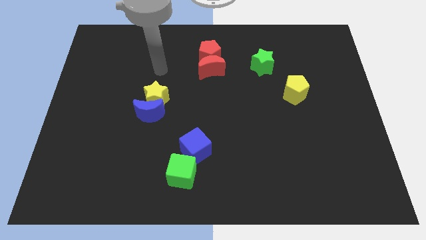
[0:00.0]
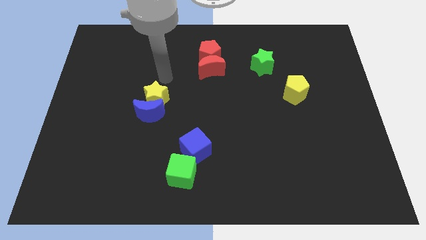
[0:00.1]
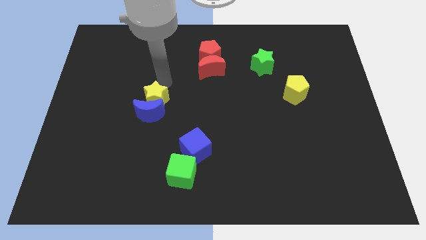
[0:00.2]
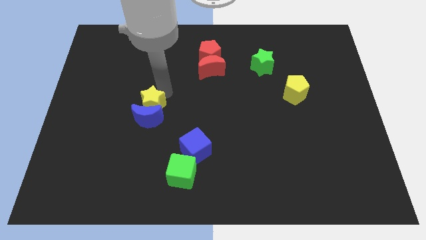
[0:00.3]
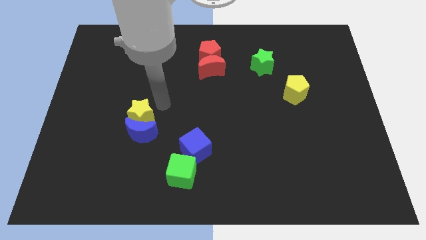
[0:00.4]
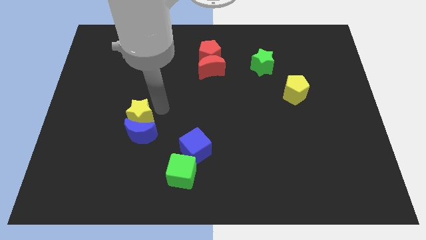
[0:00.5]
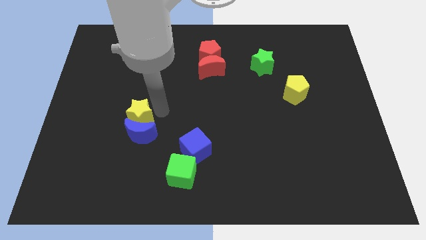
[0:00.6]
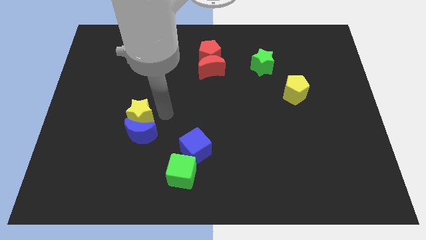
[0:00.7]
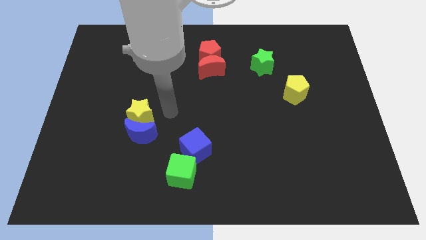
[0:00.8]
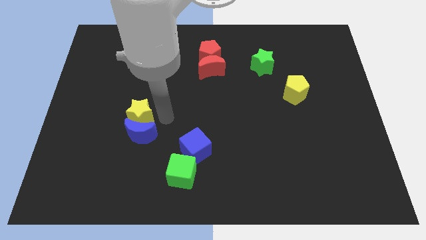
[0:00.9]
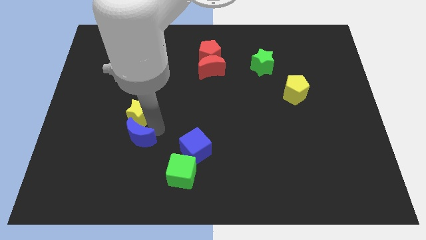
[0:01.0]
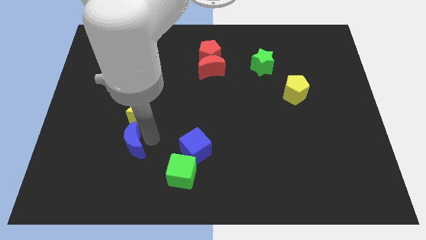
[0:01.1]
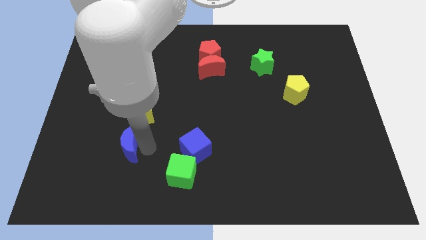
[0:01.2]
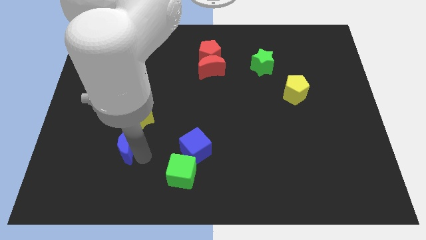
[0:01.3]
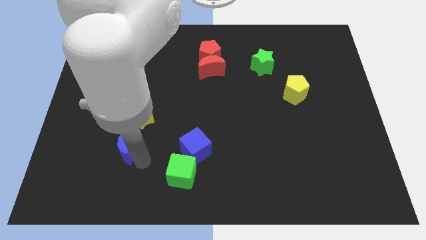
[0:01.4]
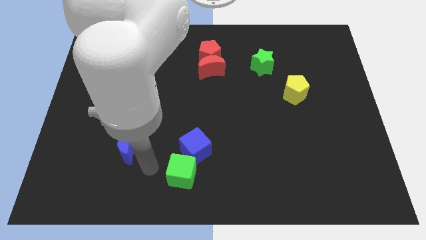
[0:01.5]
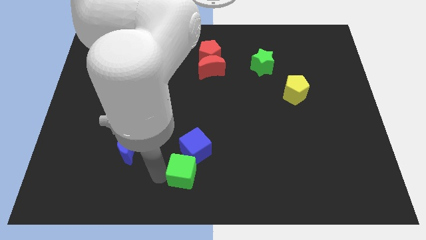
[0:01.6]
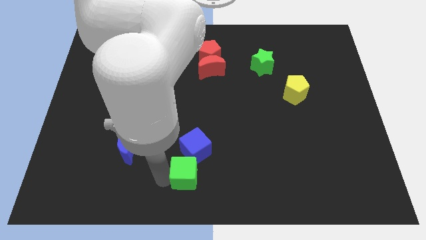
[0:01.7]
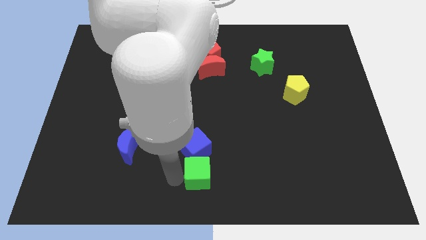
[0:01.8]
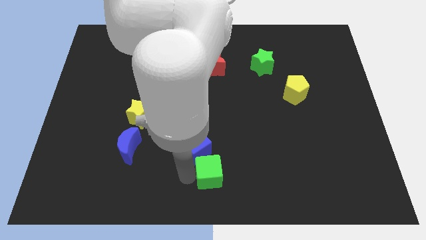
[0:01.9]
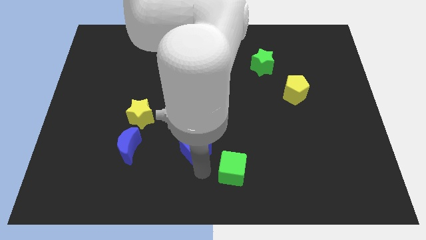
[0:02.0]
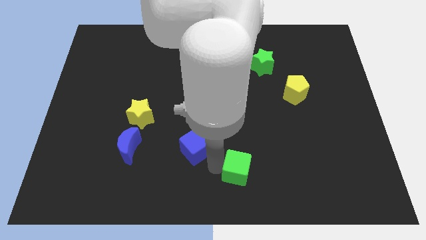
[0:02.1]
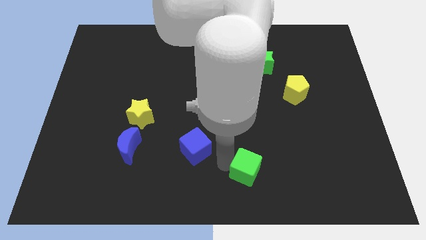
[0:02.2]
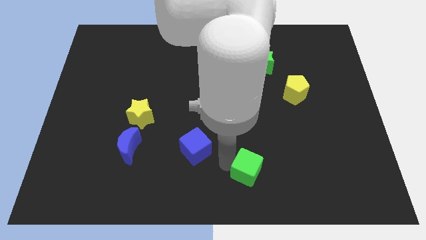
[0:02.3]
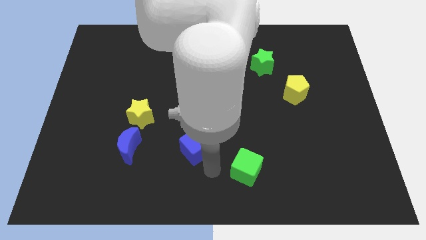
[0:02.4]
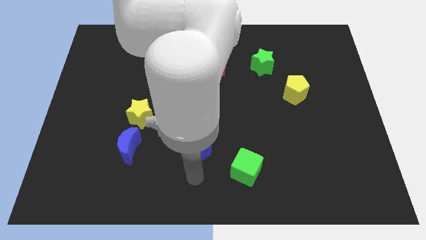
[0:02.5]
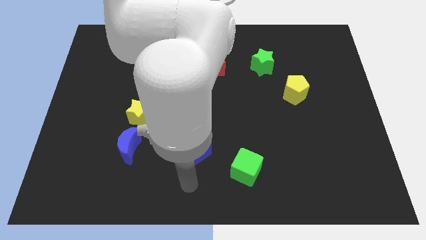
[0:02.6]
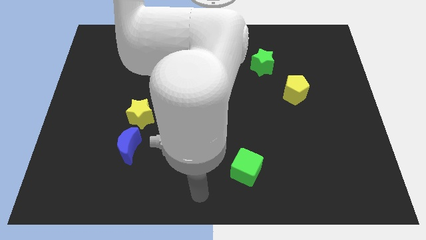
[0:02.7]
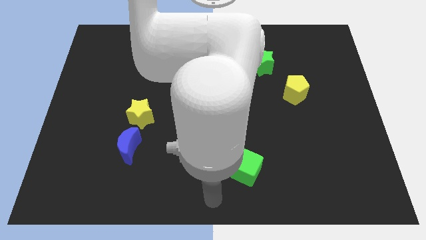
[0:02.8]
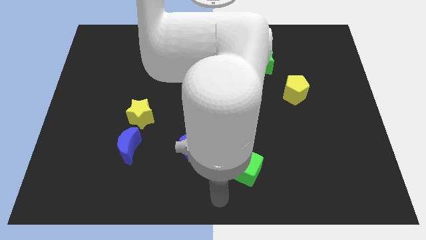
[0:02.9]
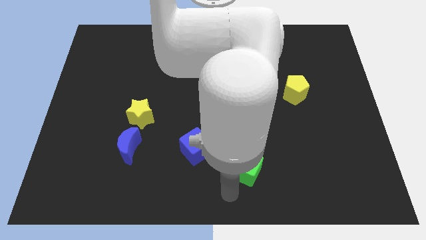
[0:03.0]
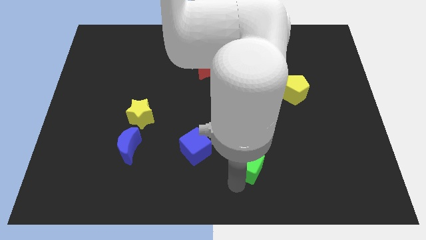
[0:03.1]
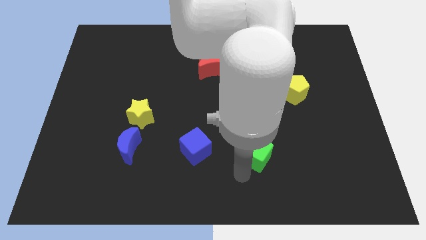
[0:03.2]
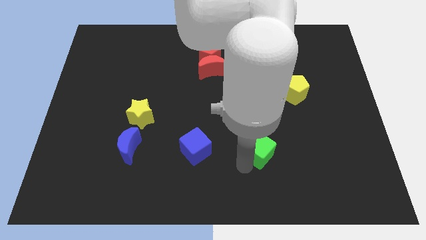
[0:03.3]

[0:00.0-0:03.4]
place the green cube right to the blue cube

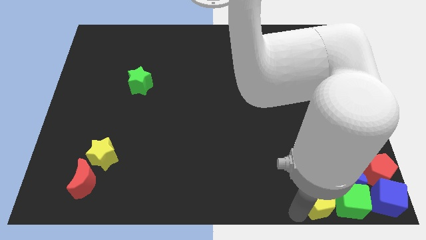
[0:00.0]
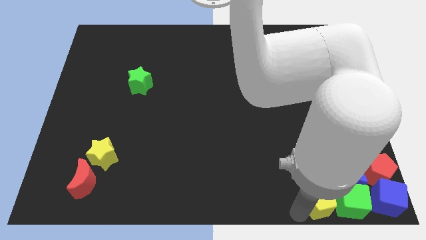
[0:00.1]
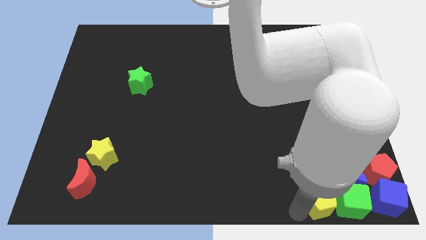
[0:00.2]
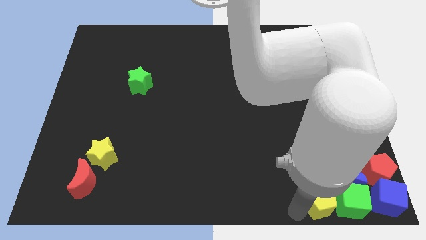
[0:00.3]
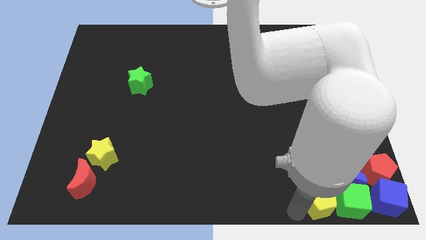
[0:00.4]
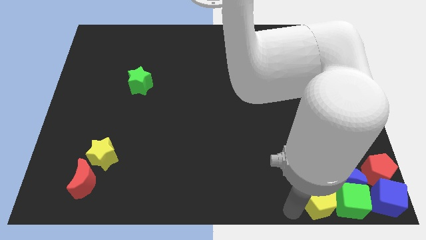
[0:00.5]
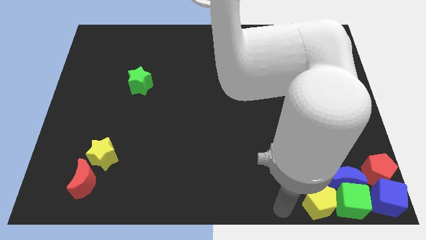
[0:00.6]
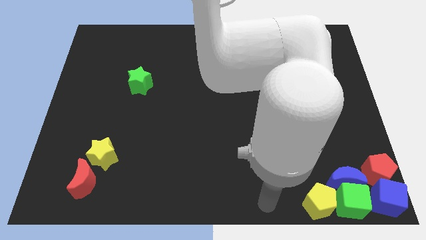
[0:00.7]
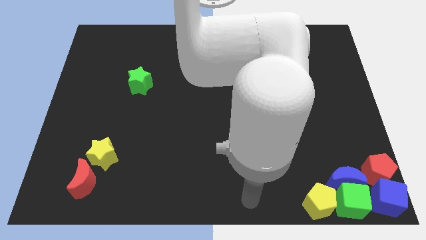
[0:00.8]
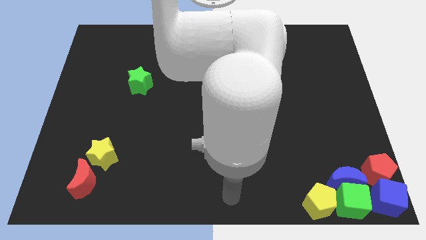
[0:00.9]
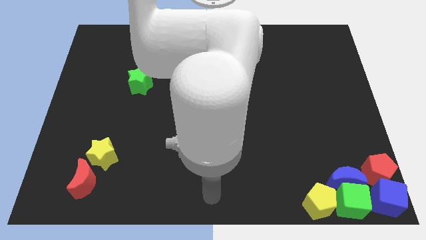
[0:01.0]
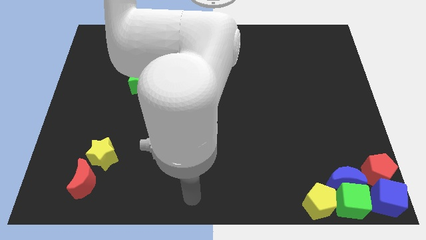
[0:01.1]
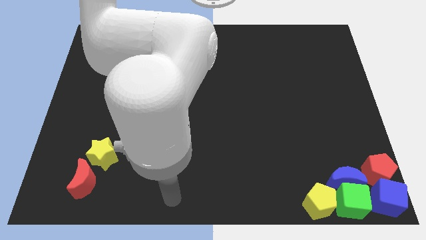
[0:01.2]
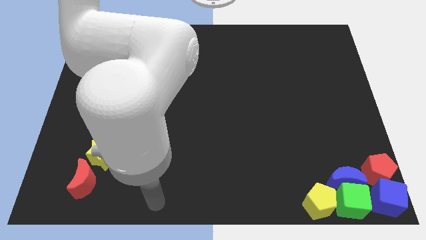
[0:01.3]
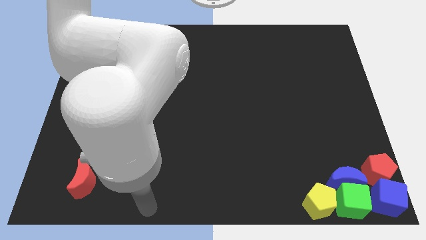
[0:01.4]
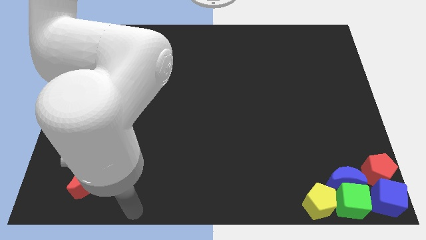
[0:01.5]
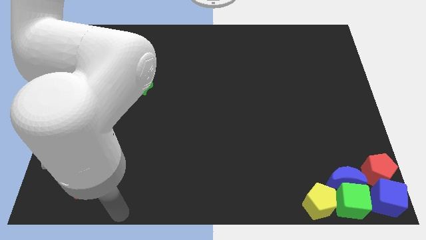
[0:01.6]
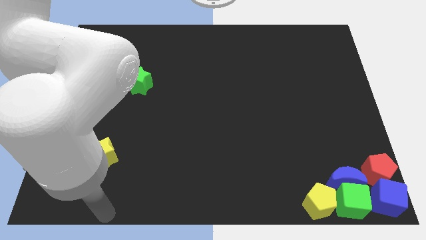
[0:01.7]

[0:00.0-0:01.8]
move the arm away from the yellow pentagon

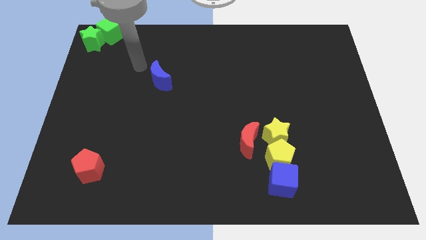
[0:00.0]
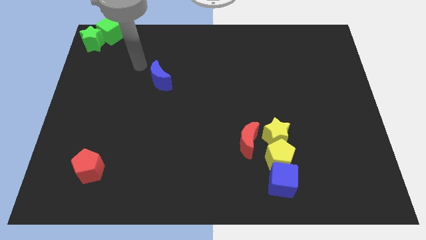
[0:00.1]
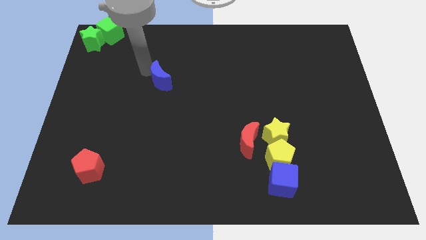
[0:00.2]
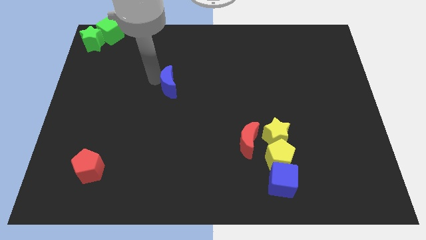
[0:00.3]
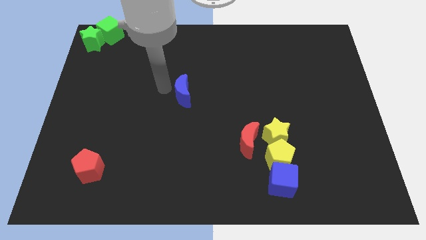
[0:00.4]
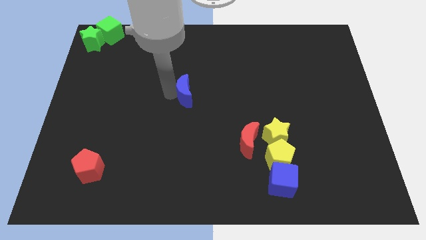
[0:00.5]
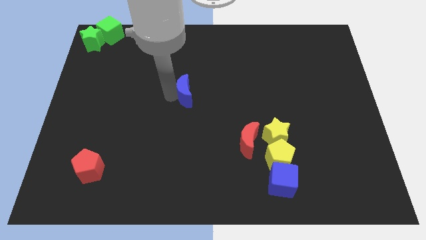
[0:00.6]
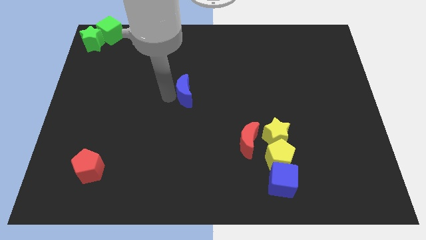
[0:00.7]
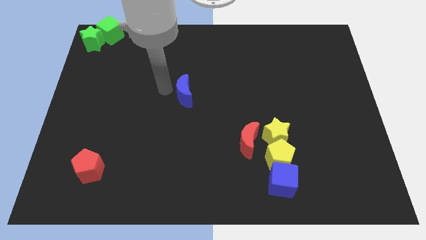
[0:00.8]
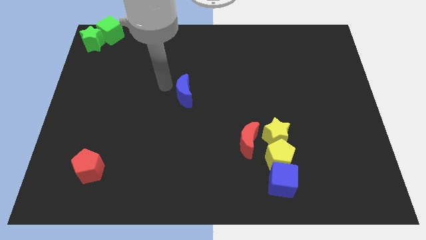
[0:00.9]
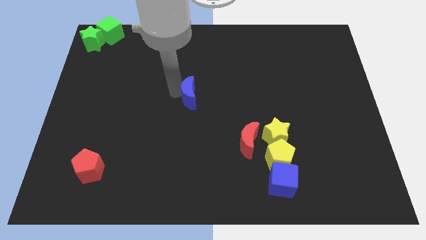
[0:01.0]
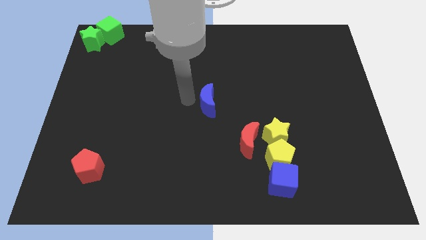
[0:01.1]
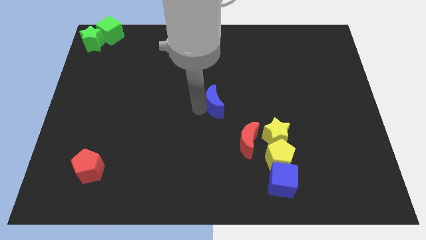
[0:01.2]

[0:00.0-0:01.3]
place the blue crescent in the center of the board

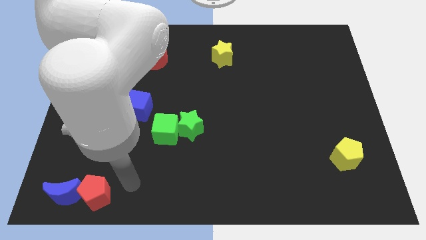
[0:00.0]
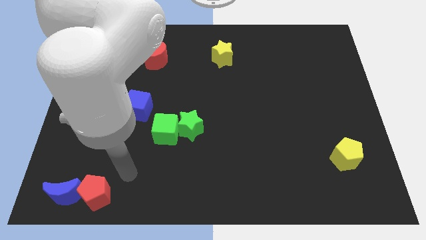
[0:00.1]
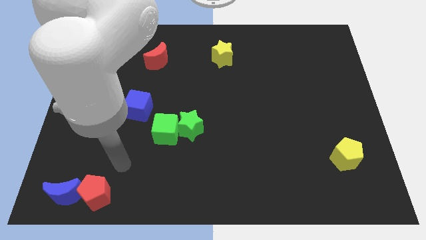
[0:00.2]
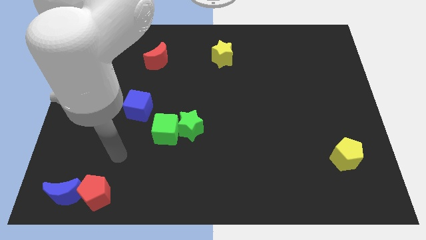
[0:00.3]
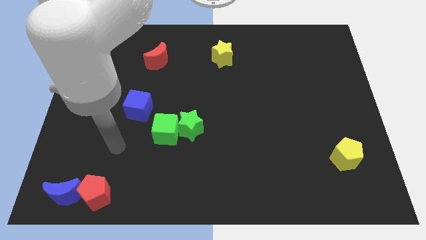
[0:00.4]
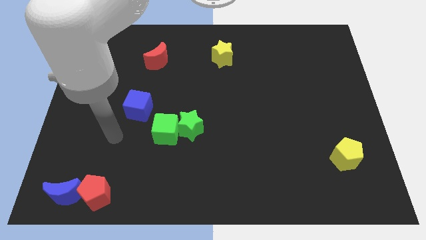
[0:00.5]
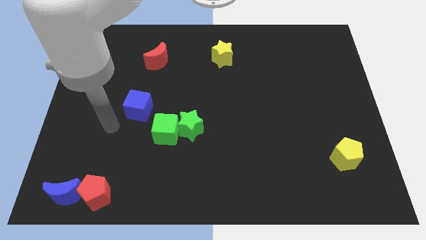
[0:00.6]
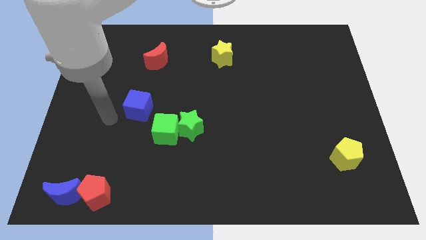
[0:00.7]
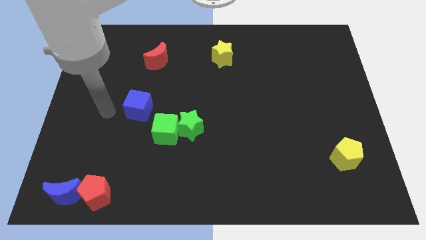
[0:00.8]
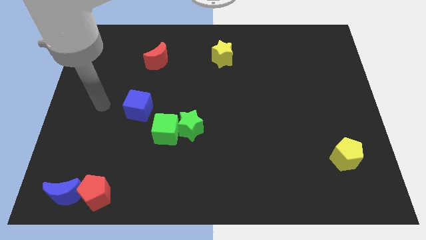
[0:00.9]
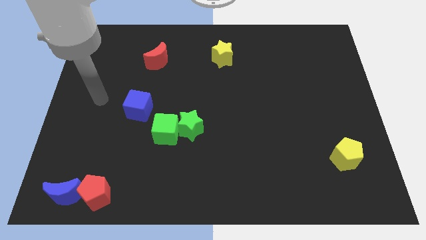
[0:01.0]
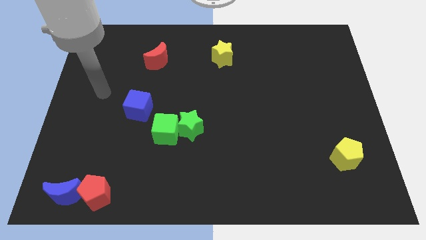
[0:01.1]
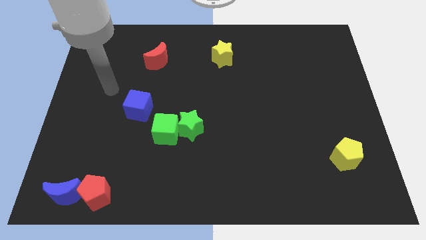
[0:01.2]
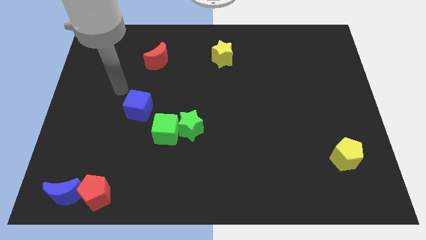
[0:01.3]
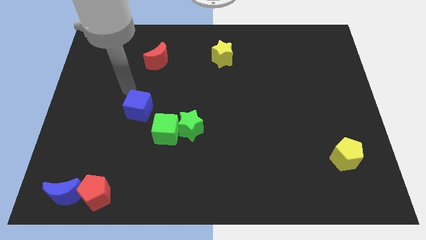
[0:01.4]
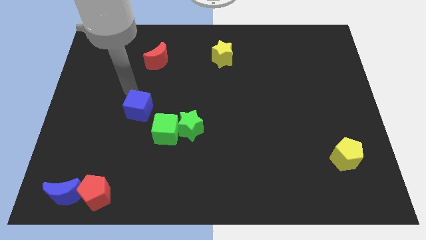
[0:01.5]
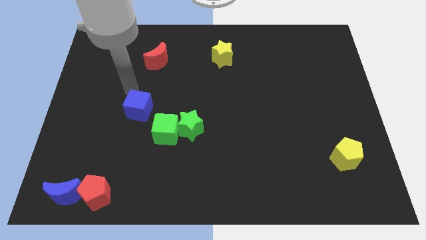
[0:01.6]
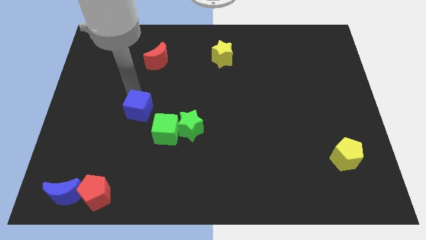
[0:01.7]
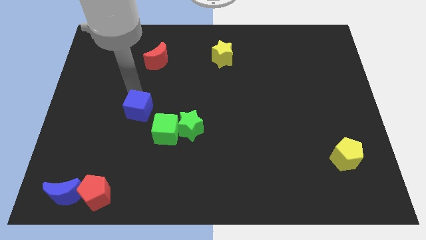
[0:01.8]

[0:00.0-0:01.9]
move your hand to the top of the blue cube

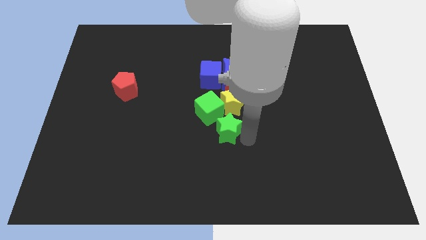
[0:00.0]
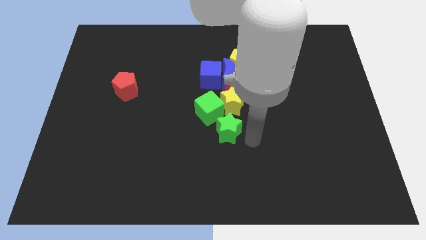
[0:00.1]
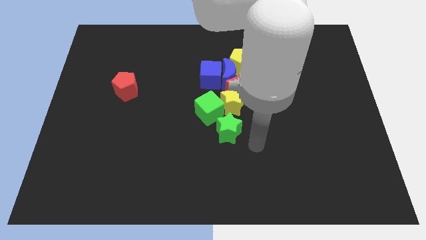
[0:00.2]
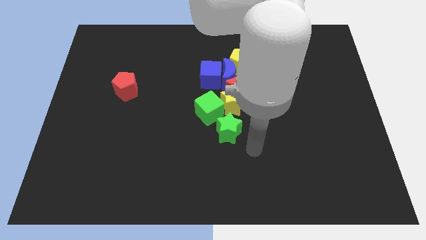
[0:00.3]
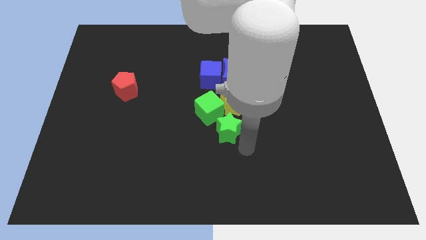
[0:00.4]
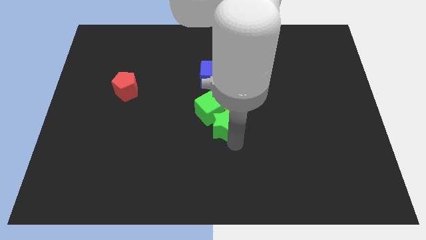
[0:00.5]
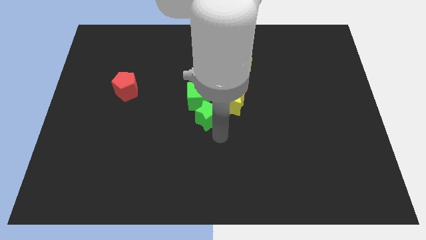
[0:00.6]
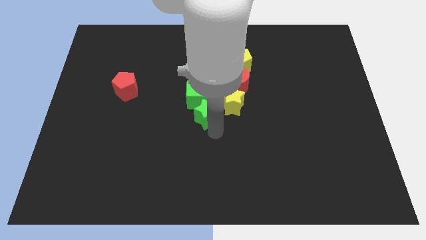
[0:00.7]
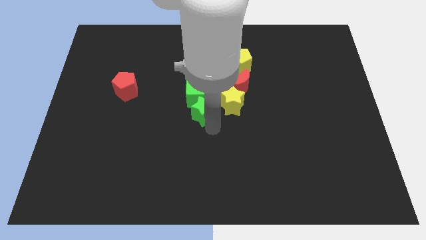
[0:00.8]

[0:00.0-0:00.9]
push green star towards green cube
